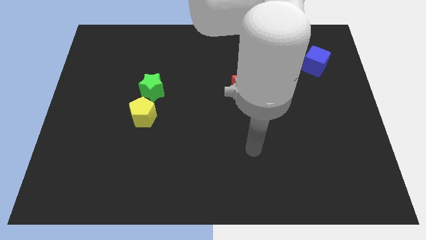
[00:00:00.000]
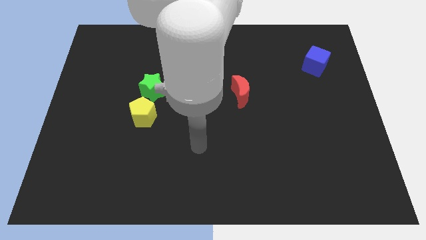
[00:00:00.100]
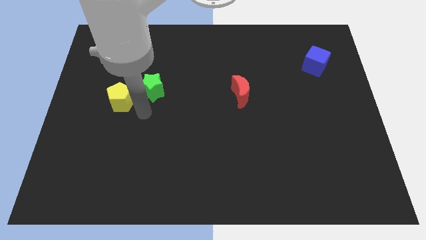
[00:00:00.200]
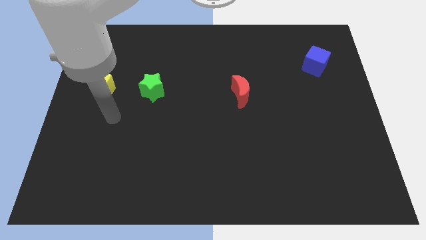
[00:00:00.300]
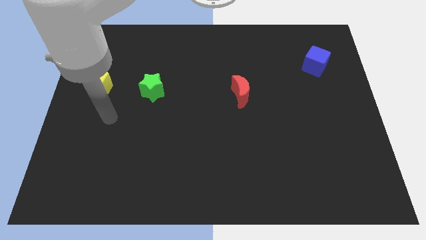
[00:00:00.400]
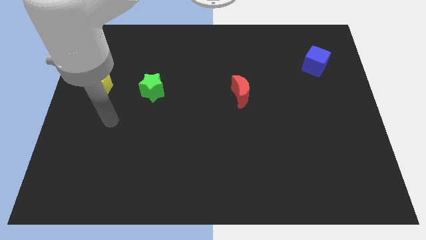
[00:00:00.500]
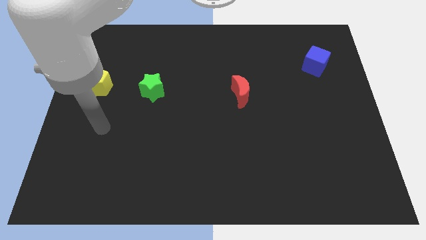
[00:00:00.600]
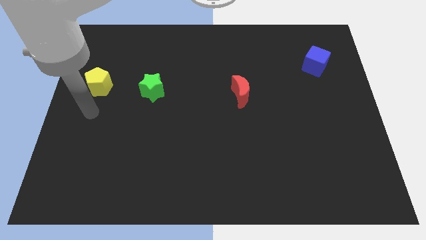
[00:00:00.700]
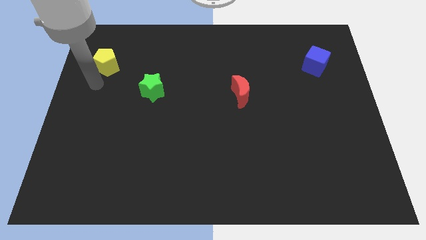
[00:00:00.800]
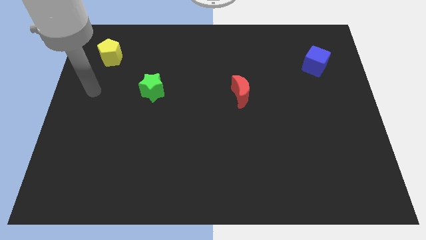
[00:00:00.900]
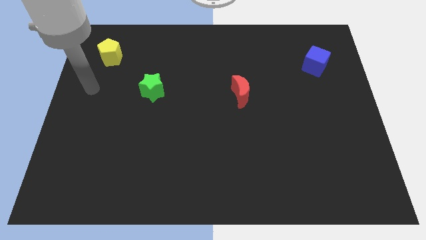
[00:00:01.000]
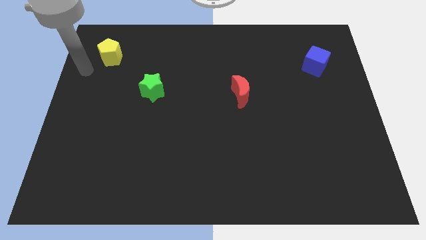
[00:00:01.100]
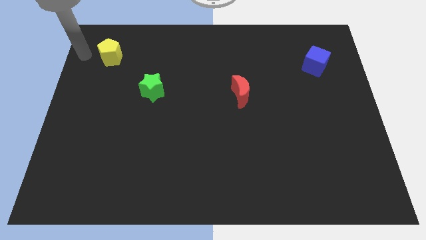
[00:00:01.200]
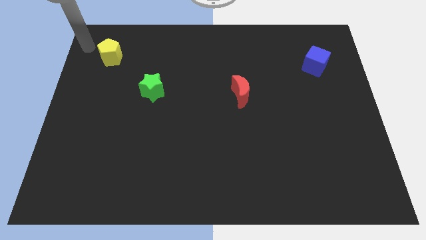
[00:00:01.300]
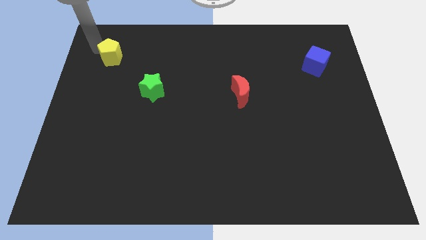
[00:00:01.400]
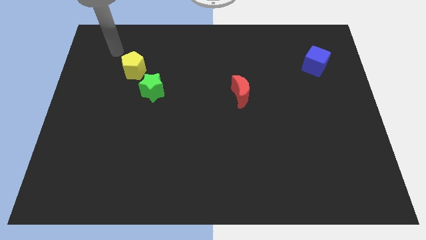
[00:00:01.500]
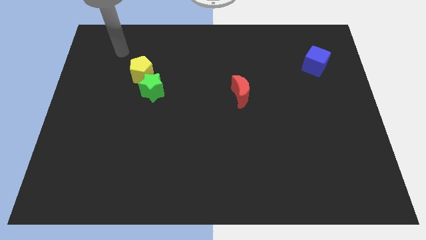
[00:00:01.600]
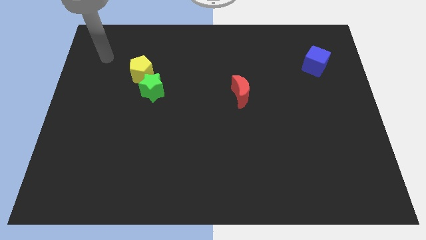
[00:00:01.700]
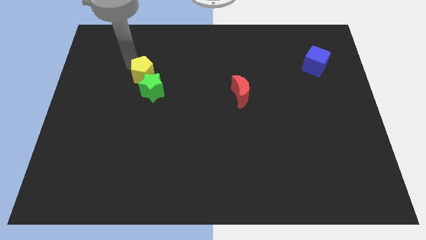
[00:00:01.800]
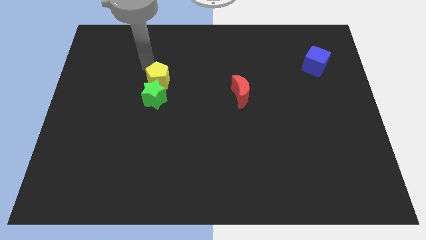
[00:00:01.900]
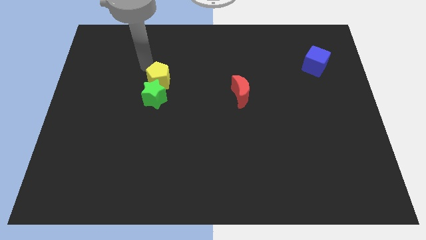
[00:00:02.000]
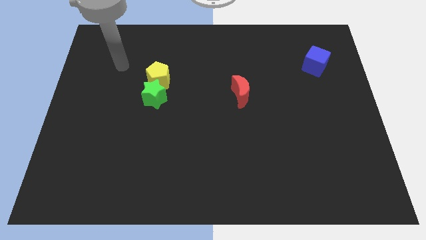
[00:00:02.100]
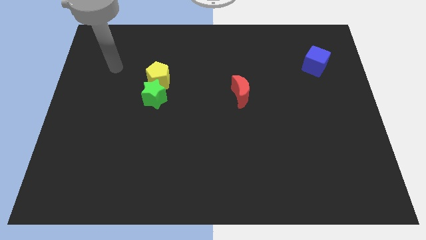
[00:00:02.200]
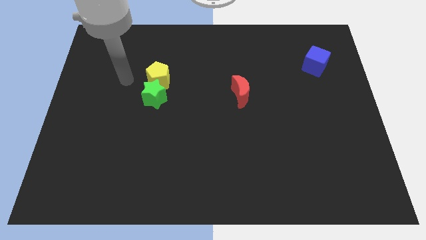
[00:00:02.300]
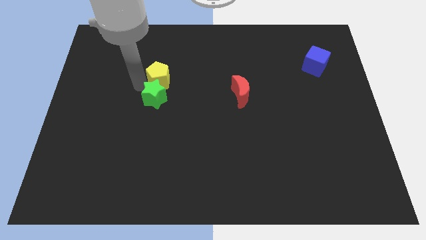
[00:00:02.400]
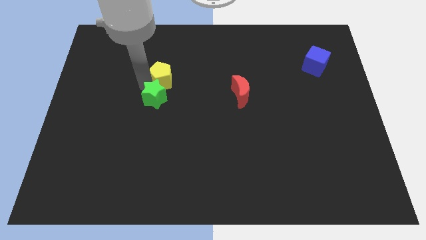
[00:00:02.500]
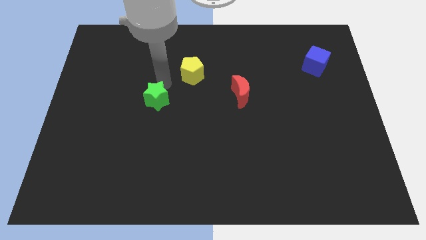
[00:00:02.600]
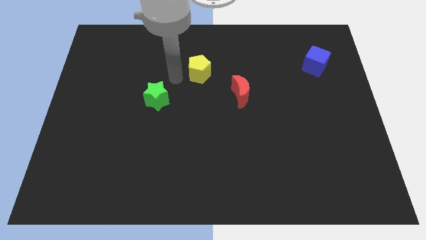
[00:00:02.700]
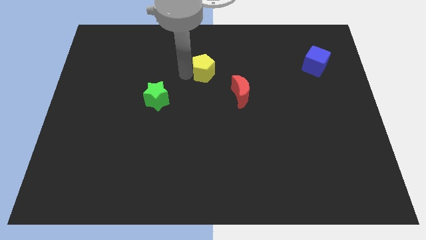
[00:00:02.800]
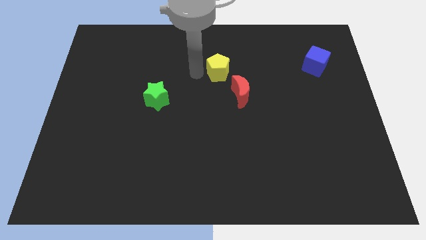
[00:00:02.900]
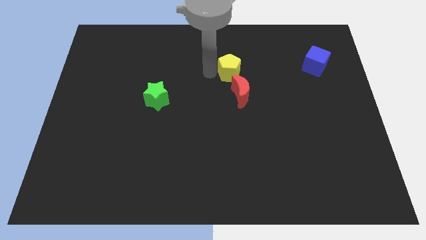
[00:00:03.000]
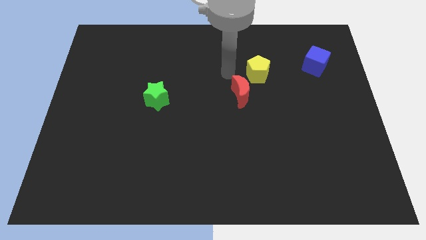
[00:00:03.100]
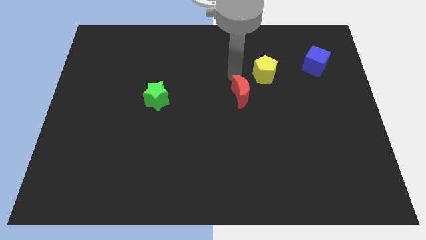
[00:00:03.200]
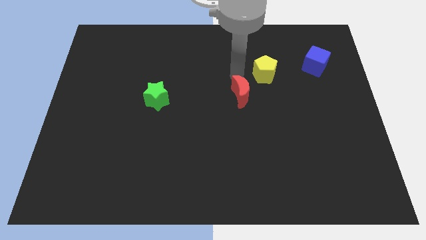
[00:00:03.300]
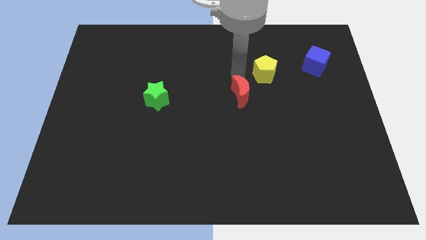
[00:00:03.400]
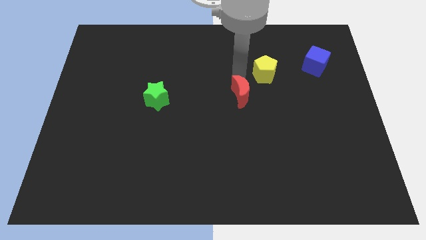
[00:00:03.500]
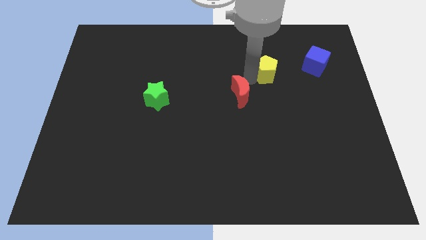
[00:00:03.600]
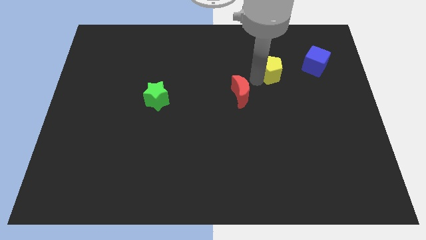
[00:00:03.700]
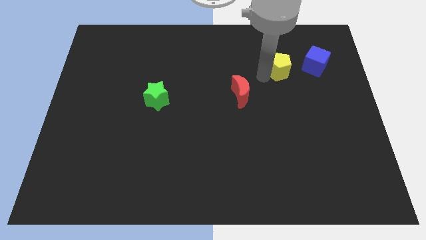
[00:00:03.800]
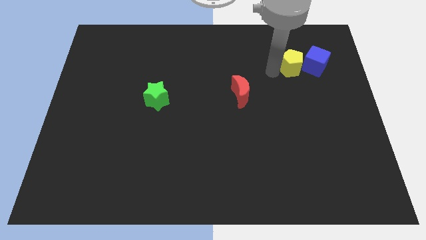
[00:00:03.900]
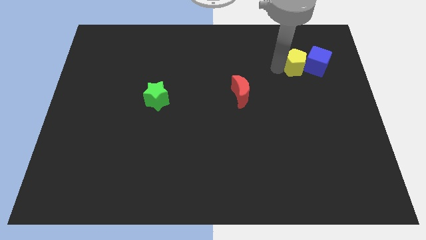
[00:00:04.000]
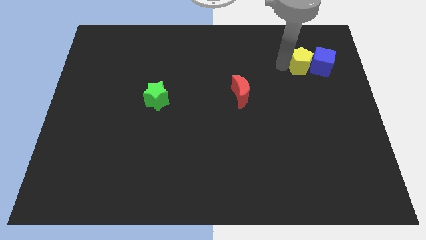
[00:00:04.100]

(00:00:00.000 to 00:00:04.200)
move the yellow block next to the blue block

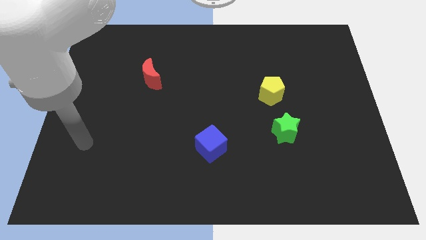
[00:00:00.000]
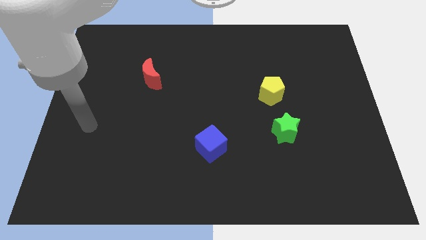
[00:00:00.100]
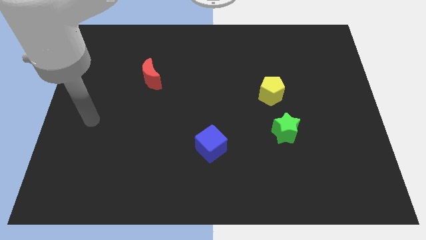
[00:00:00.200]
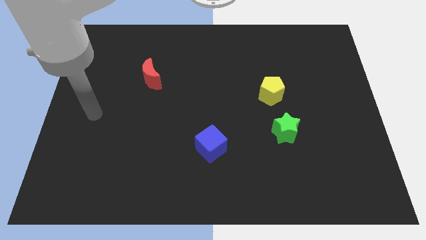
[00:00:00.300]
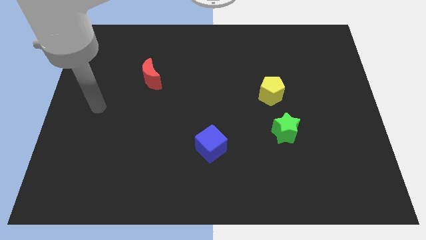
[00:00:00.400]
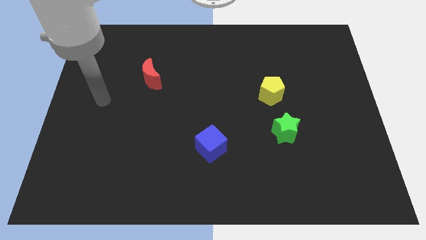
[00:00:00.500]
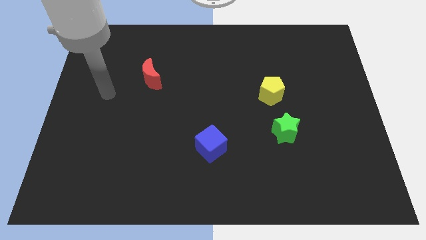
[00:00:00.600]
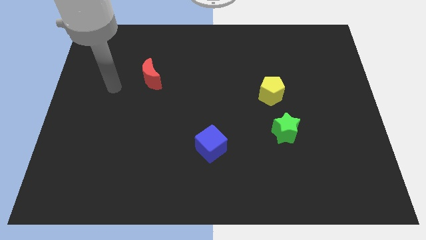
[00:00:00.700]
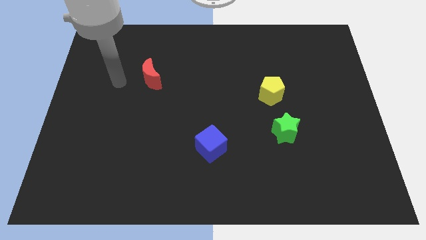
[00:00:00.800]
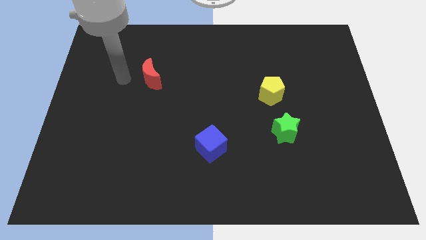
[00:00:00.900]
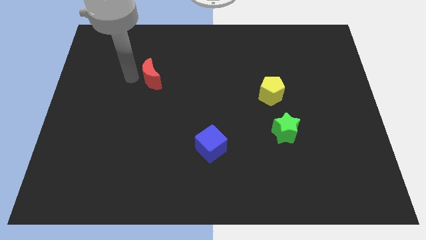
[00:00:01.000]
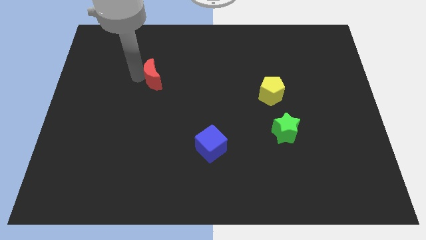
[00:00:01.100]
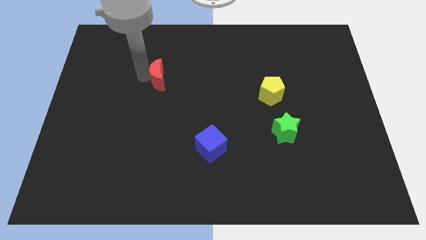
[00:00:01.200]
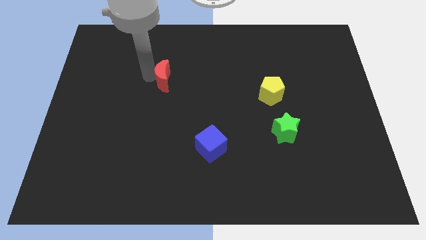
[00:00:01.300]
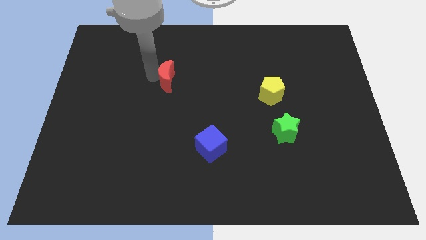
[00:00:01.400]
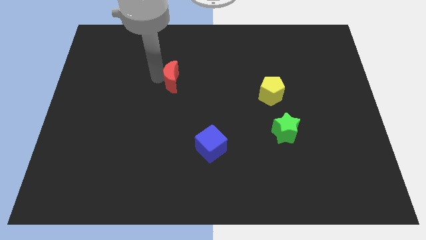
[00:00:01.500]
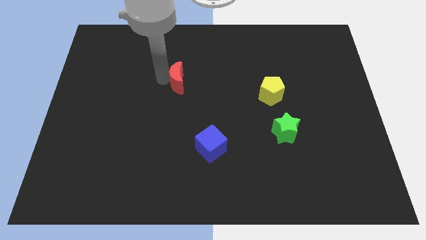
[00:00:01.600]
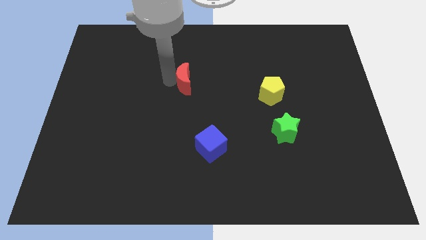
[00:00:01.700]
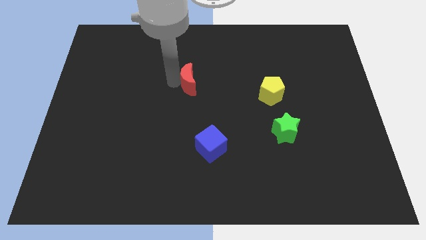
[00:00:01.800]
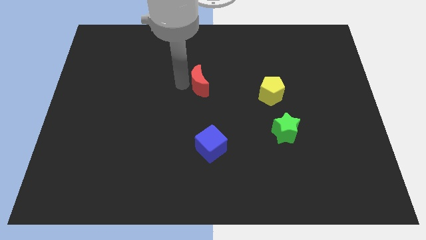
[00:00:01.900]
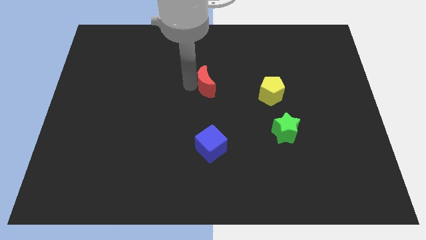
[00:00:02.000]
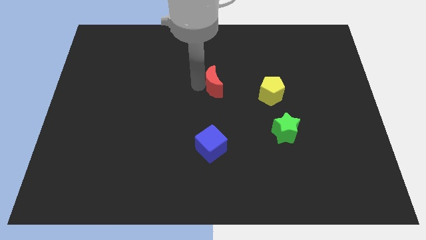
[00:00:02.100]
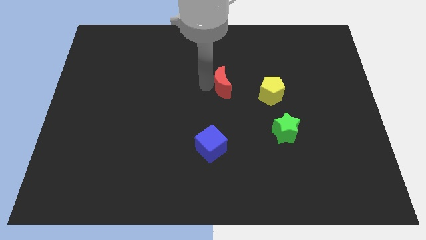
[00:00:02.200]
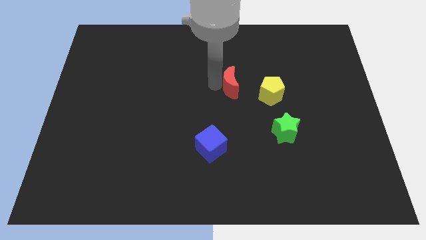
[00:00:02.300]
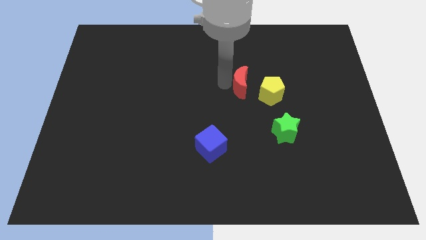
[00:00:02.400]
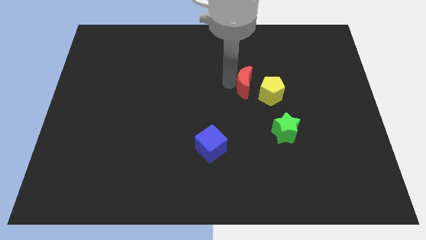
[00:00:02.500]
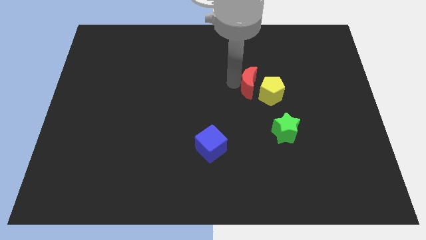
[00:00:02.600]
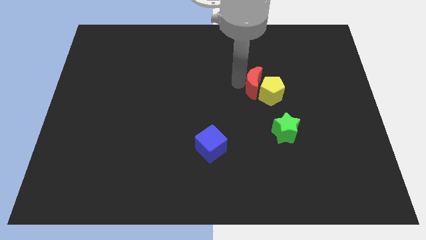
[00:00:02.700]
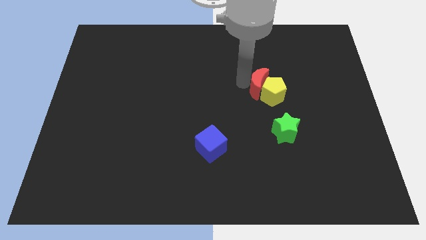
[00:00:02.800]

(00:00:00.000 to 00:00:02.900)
slide the red block to the yellow pentagon

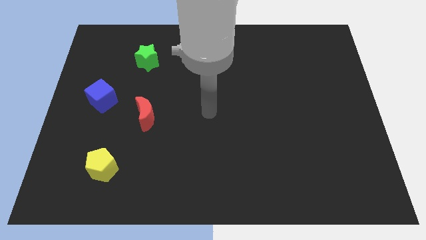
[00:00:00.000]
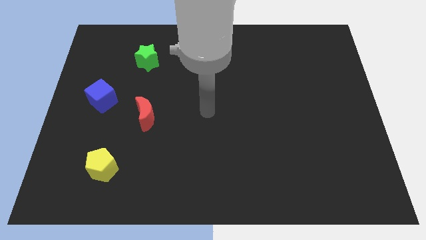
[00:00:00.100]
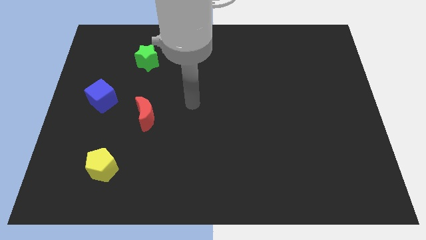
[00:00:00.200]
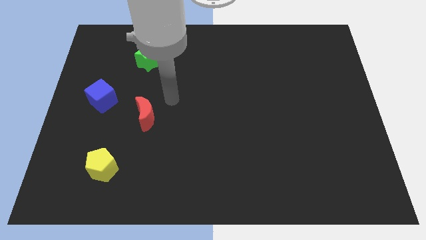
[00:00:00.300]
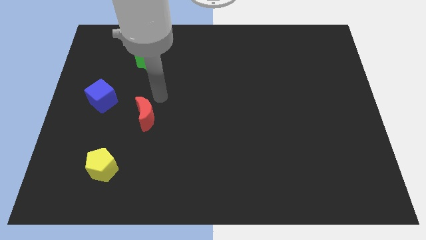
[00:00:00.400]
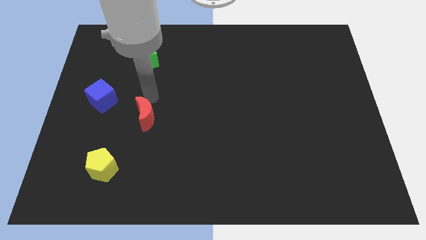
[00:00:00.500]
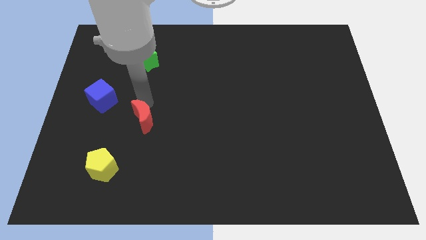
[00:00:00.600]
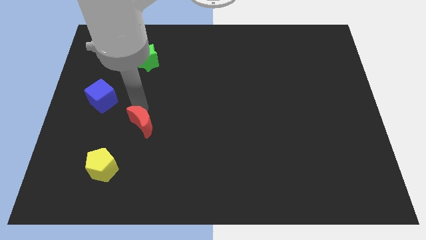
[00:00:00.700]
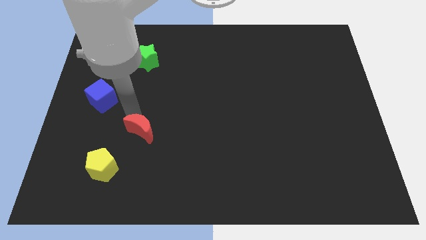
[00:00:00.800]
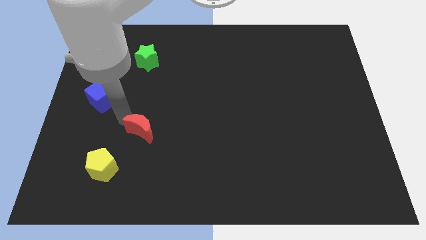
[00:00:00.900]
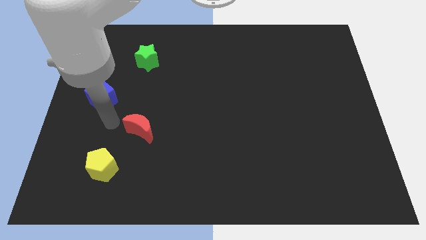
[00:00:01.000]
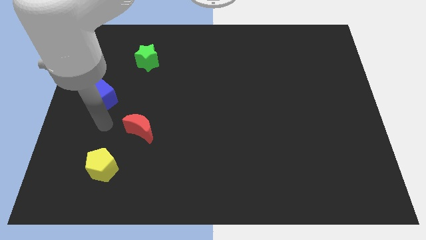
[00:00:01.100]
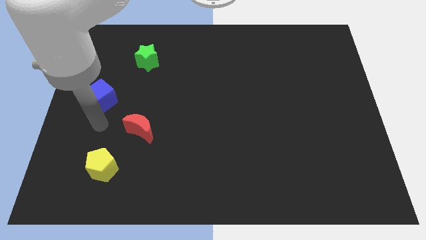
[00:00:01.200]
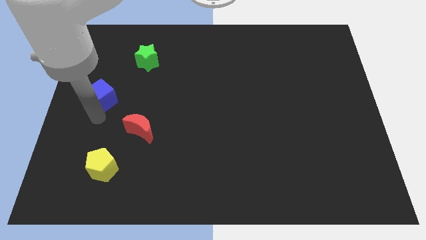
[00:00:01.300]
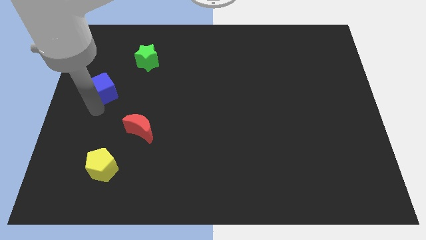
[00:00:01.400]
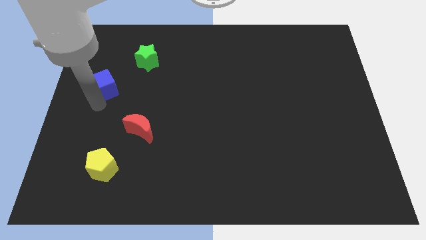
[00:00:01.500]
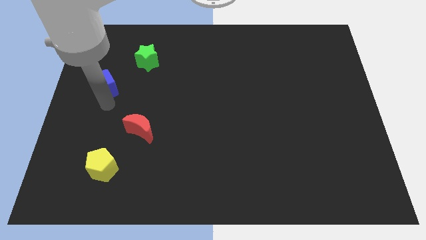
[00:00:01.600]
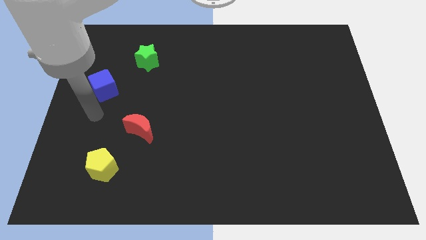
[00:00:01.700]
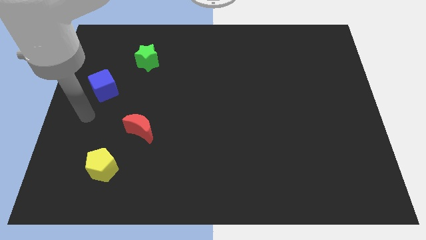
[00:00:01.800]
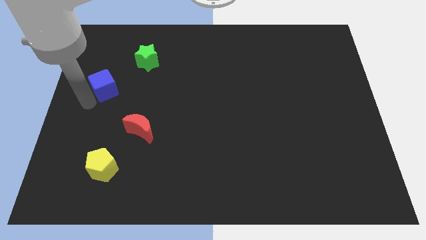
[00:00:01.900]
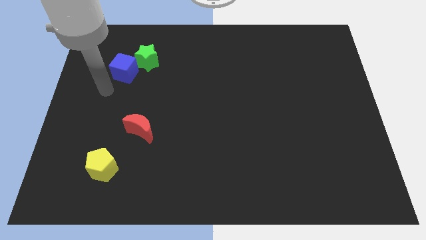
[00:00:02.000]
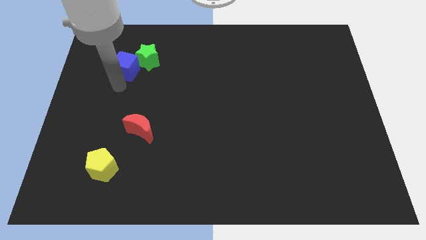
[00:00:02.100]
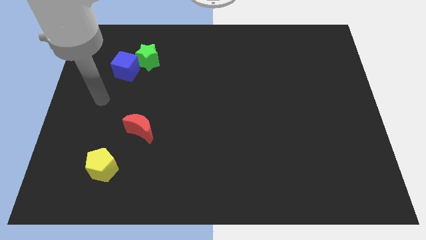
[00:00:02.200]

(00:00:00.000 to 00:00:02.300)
move the blue block towards the star
